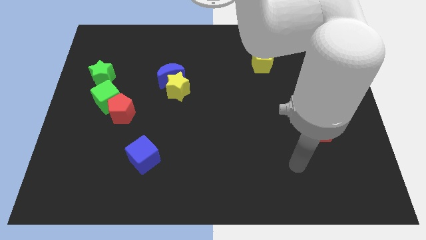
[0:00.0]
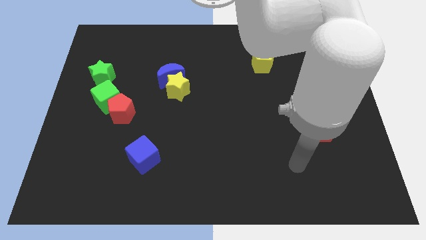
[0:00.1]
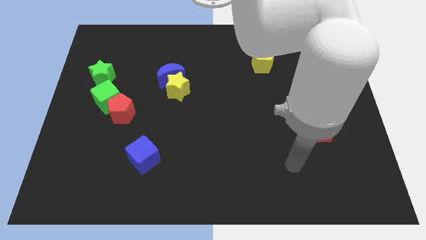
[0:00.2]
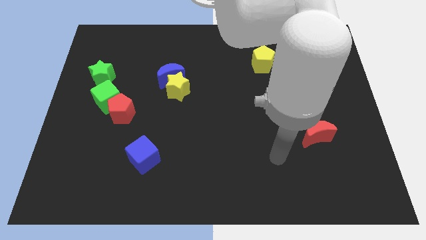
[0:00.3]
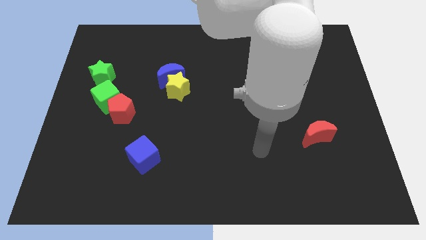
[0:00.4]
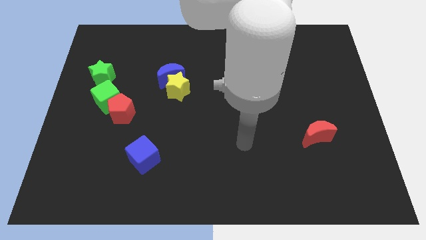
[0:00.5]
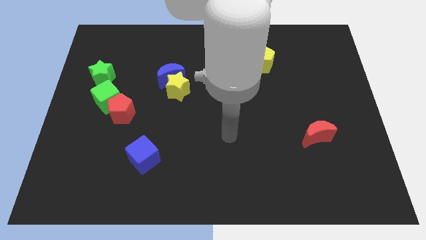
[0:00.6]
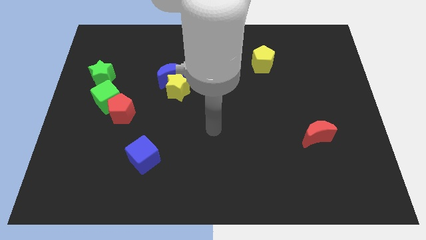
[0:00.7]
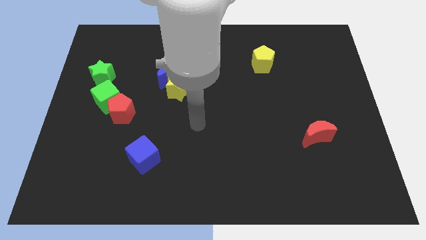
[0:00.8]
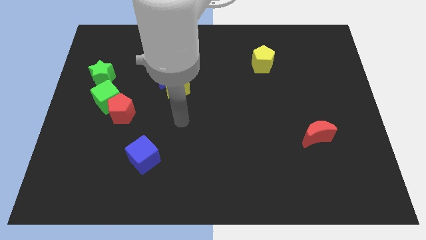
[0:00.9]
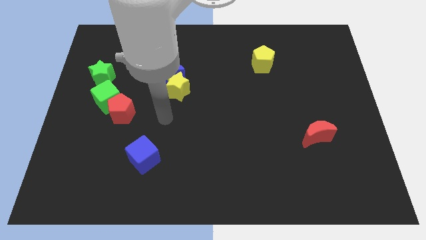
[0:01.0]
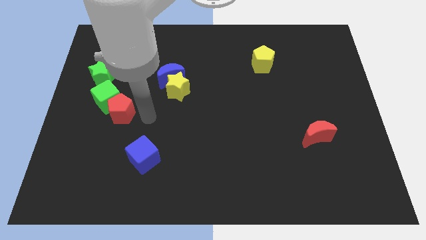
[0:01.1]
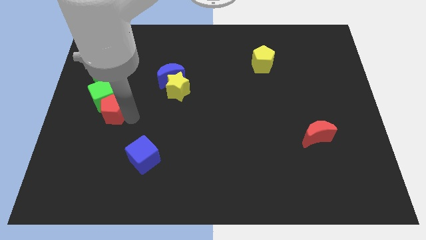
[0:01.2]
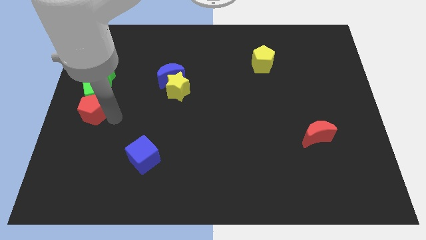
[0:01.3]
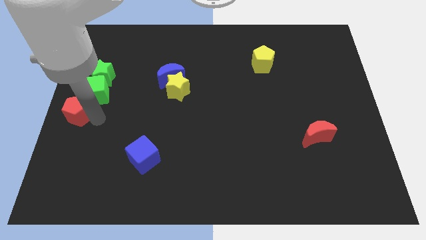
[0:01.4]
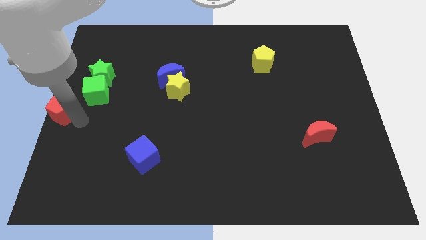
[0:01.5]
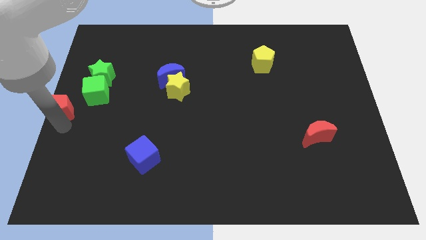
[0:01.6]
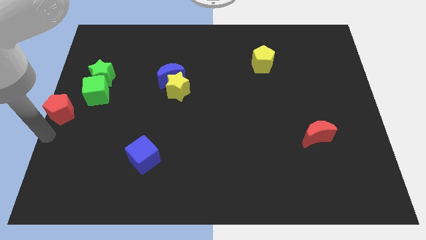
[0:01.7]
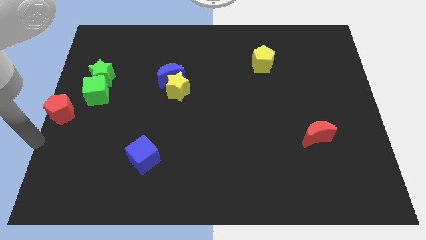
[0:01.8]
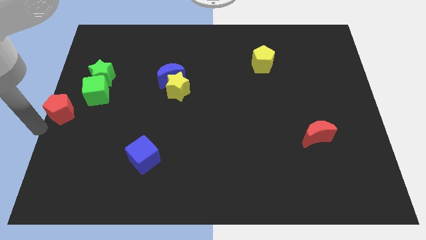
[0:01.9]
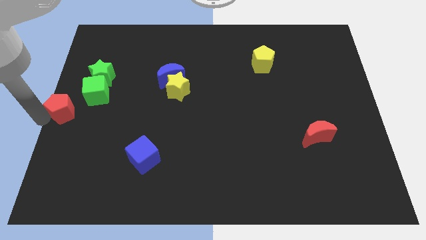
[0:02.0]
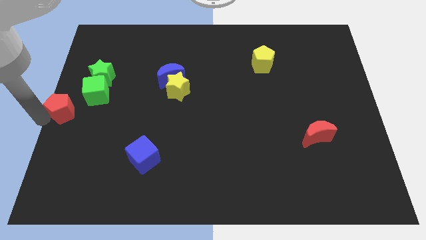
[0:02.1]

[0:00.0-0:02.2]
separate the red pentagon away from the green cube

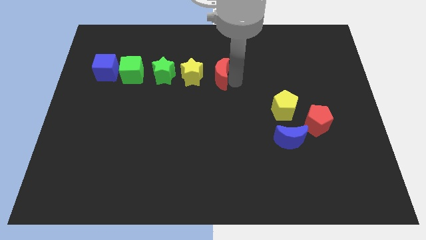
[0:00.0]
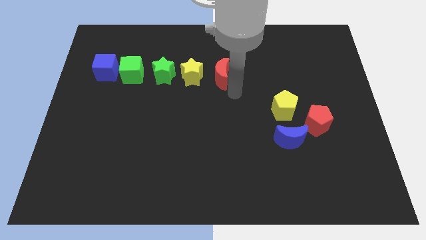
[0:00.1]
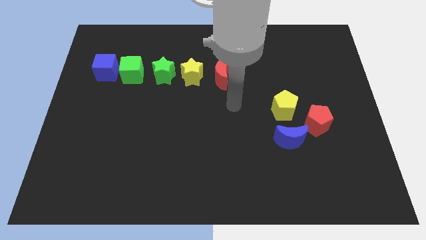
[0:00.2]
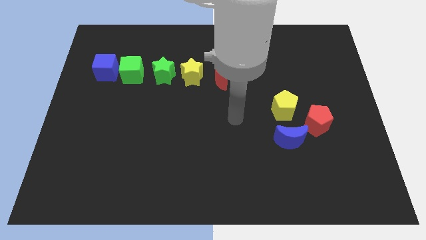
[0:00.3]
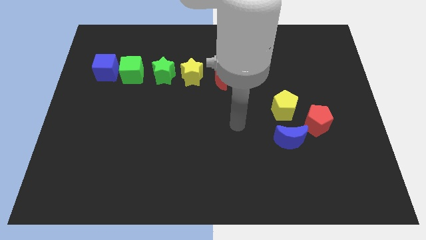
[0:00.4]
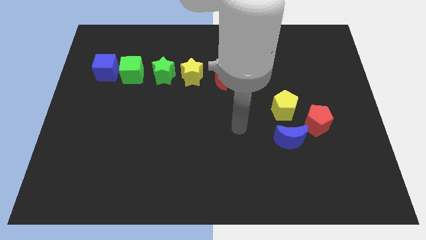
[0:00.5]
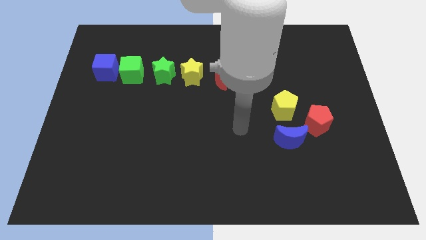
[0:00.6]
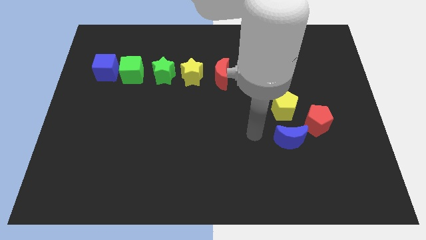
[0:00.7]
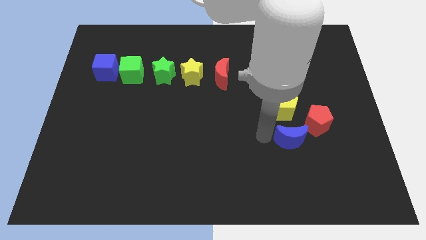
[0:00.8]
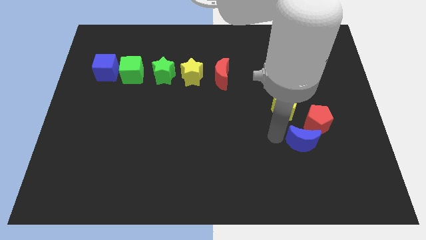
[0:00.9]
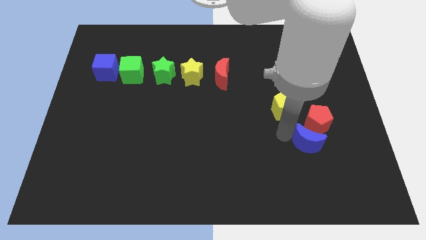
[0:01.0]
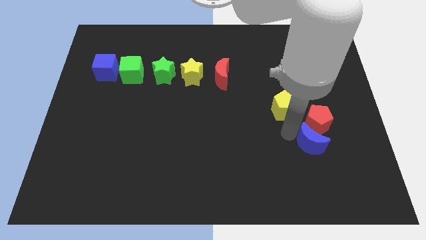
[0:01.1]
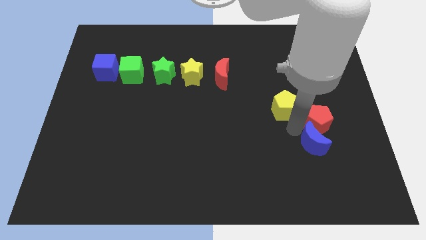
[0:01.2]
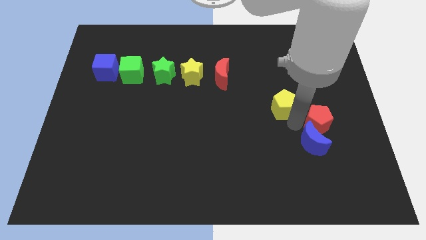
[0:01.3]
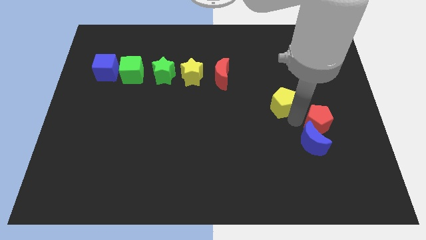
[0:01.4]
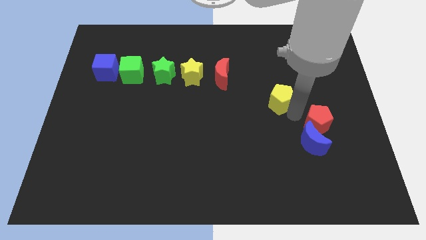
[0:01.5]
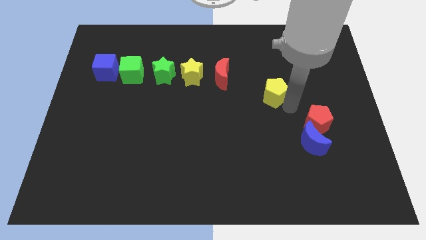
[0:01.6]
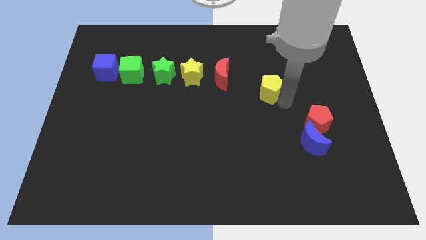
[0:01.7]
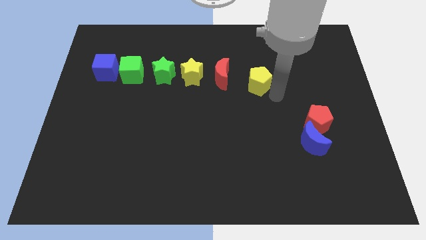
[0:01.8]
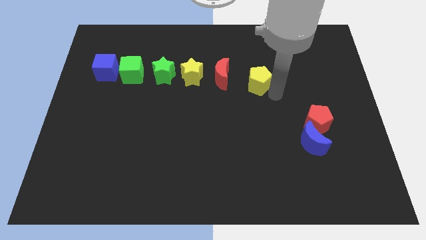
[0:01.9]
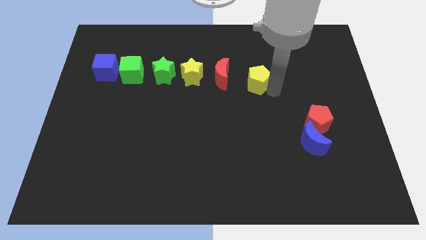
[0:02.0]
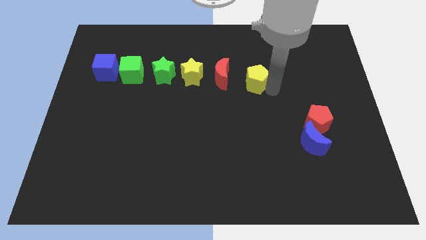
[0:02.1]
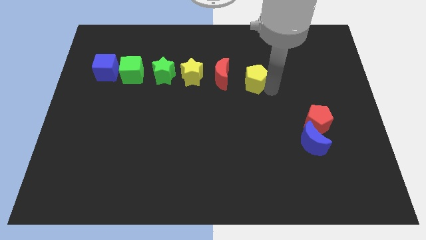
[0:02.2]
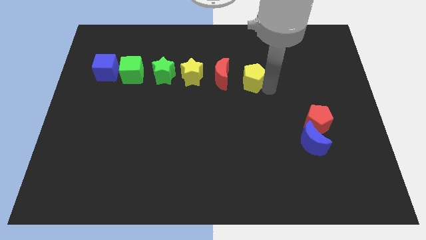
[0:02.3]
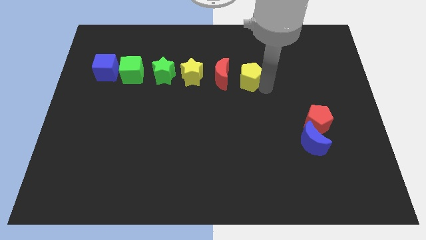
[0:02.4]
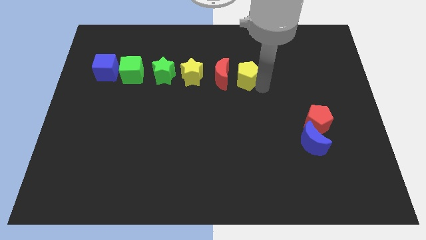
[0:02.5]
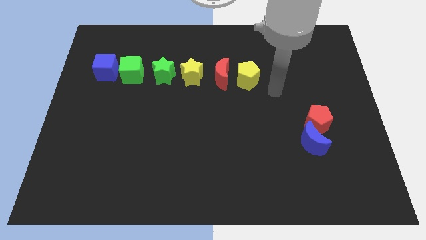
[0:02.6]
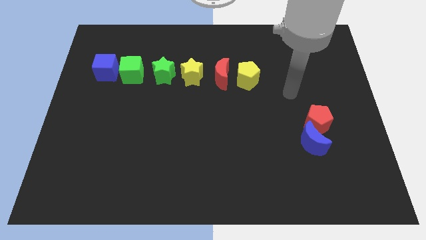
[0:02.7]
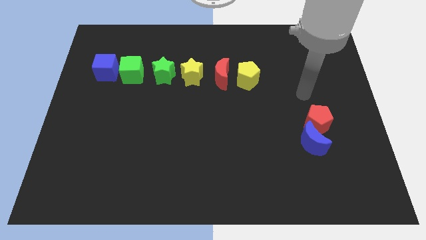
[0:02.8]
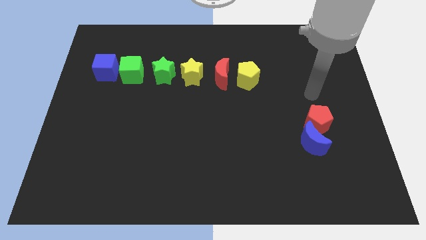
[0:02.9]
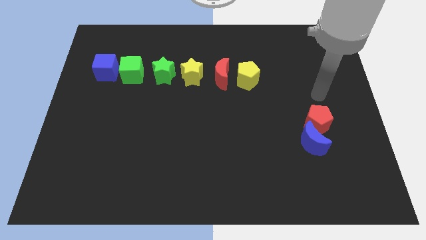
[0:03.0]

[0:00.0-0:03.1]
place the yellow pentagon beside the red moon

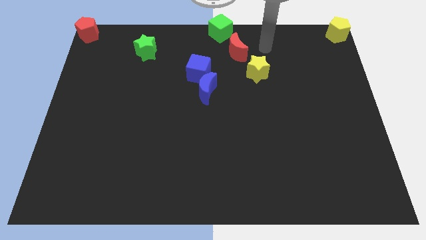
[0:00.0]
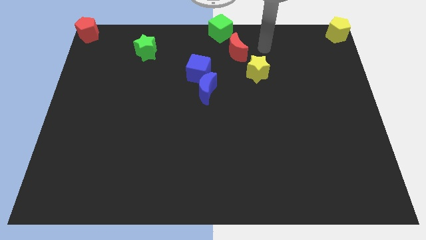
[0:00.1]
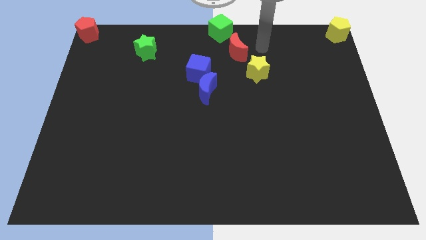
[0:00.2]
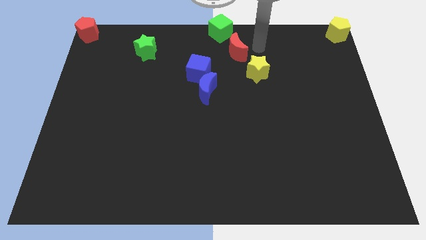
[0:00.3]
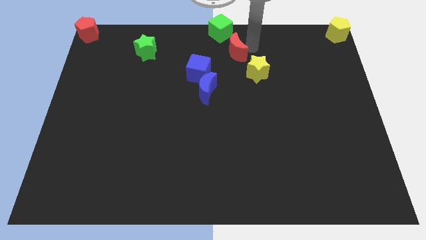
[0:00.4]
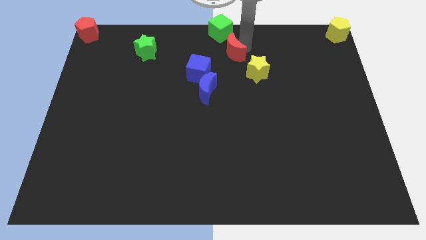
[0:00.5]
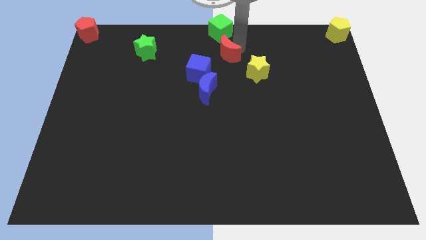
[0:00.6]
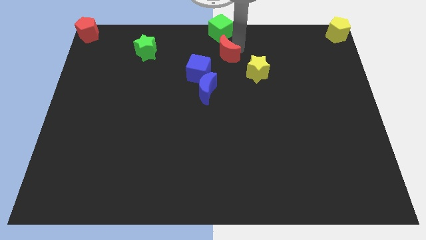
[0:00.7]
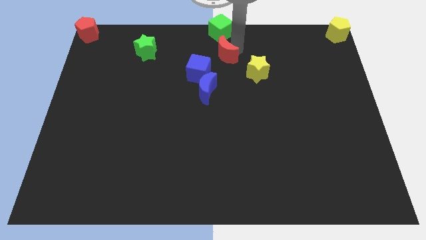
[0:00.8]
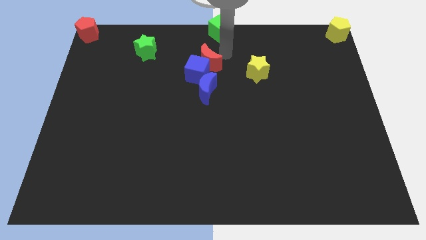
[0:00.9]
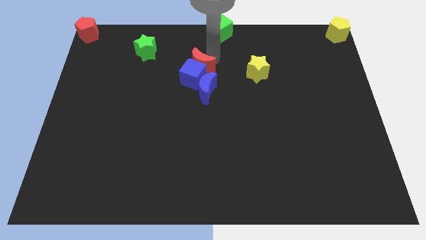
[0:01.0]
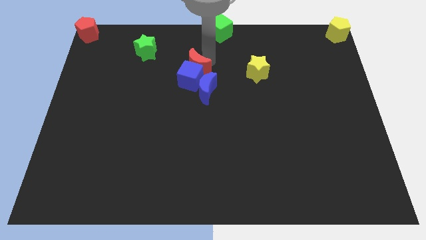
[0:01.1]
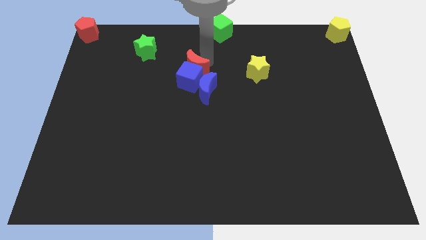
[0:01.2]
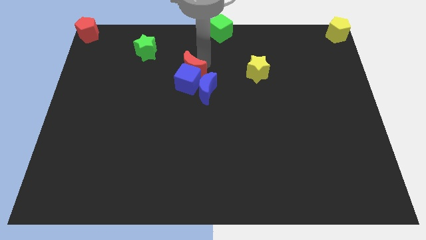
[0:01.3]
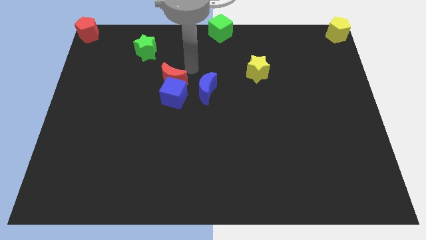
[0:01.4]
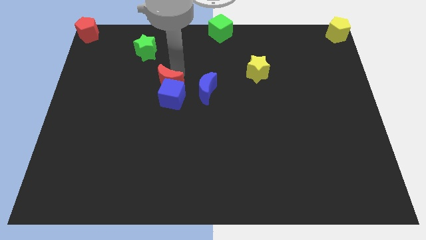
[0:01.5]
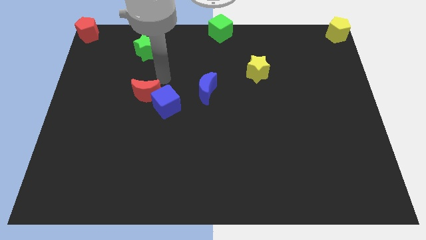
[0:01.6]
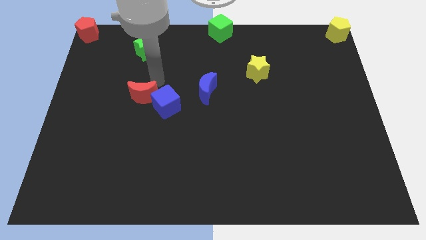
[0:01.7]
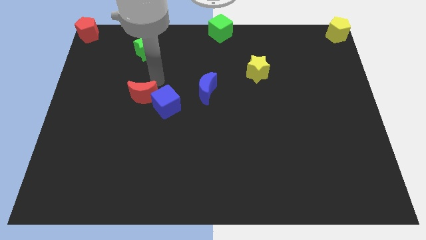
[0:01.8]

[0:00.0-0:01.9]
push the red crescent into blue cube

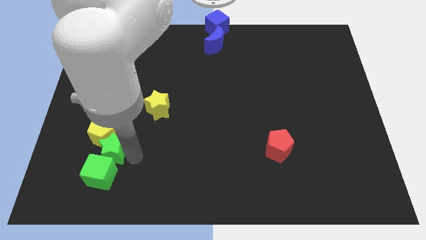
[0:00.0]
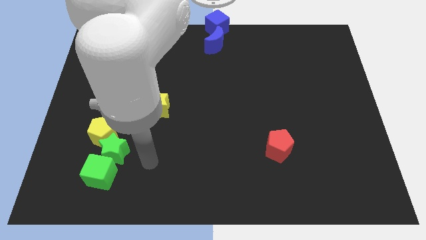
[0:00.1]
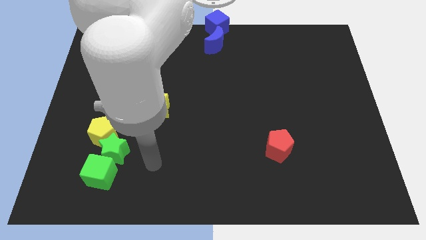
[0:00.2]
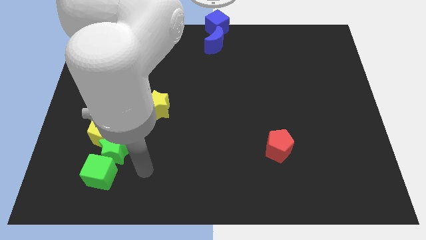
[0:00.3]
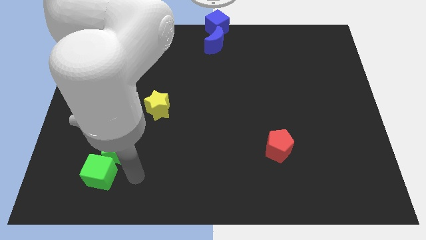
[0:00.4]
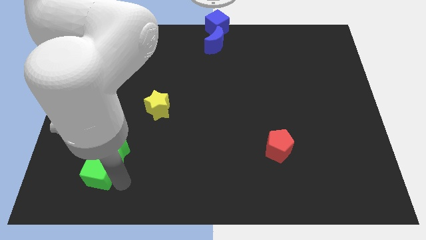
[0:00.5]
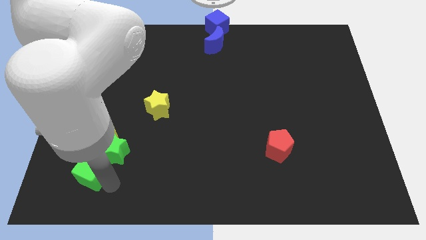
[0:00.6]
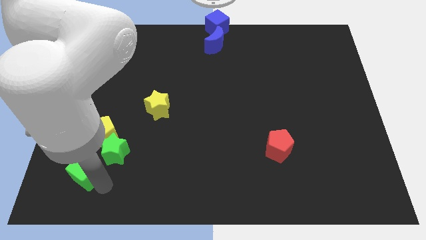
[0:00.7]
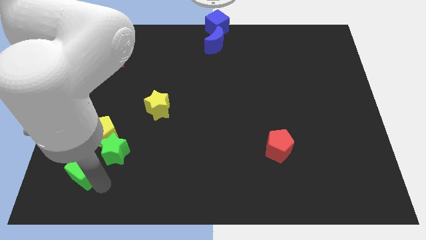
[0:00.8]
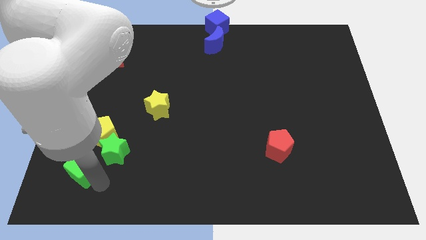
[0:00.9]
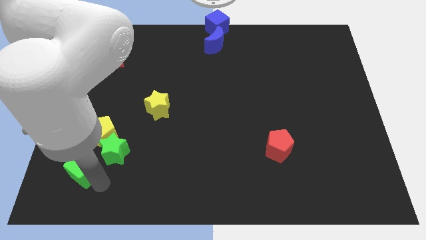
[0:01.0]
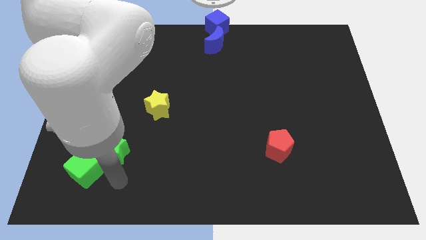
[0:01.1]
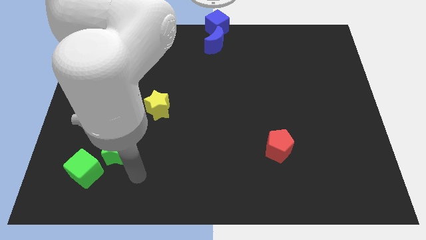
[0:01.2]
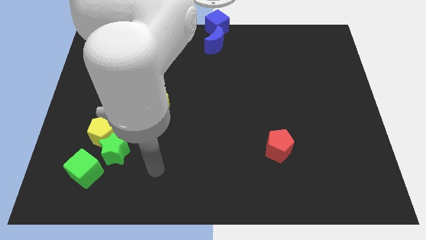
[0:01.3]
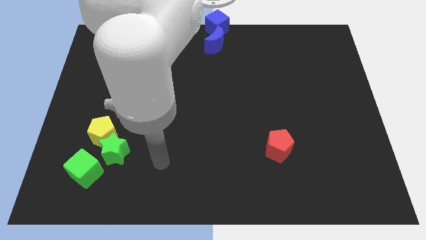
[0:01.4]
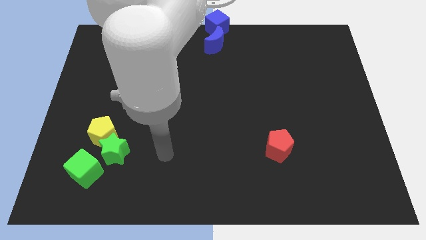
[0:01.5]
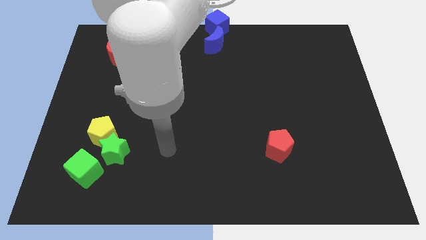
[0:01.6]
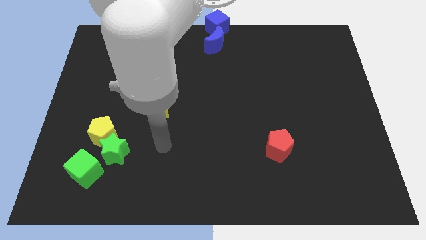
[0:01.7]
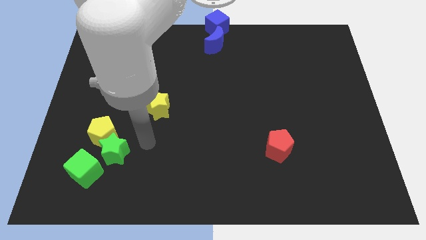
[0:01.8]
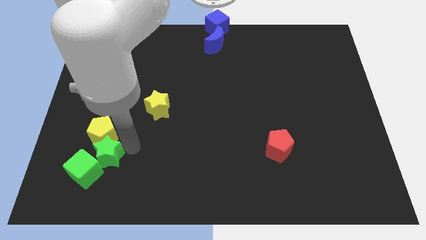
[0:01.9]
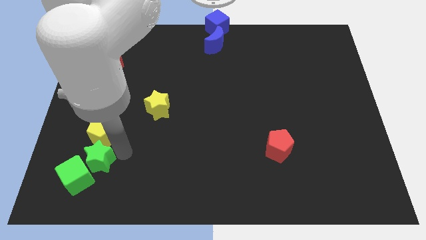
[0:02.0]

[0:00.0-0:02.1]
place your arm to the top right of green star
